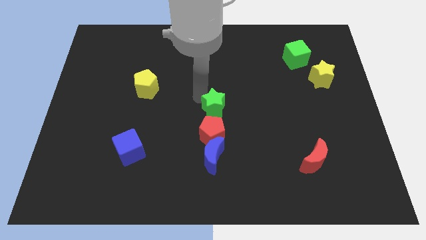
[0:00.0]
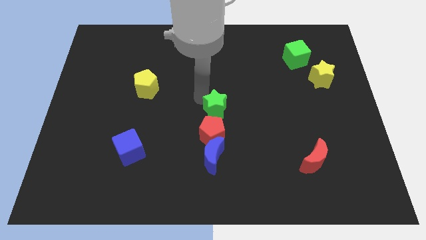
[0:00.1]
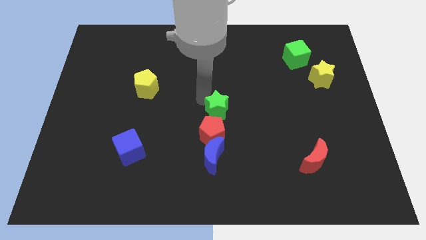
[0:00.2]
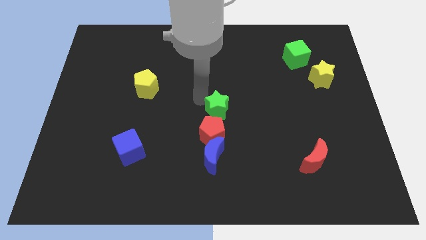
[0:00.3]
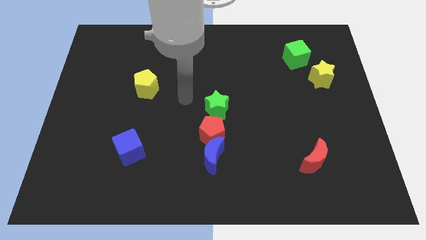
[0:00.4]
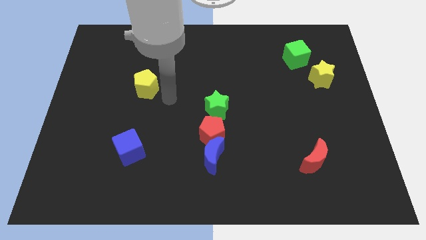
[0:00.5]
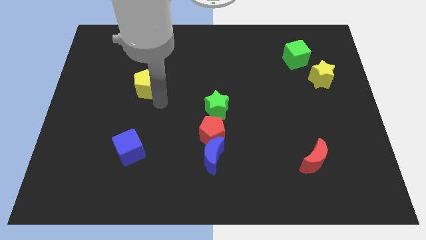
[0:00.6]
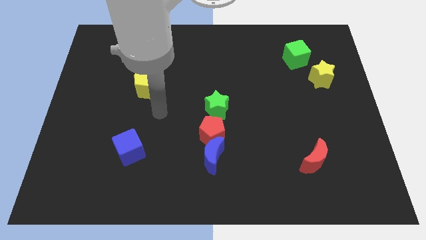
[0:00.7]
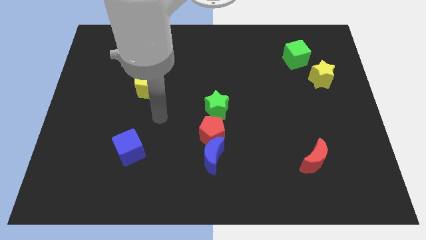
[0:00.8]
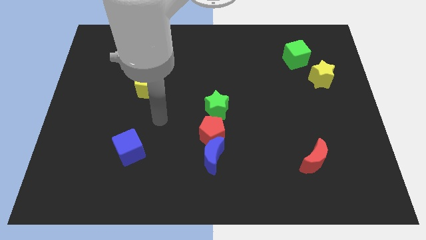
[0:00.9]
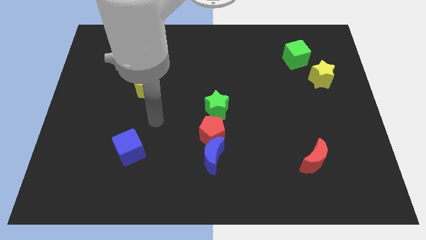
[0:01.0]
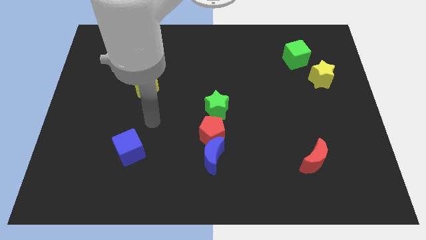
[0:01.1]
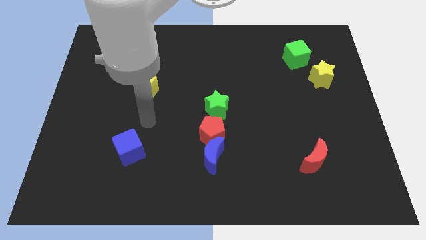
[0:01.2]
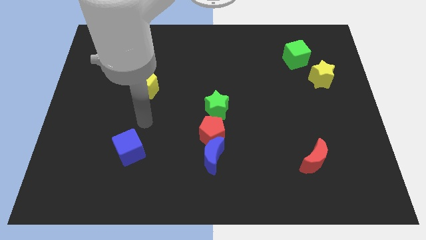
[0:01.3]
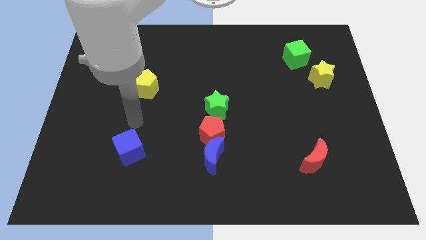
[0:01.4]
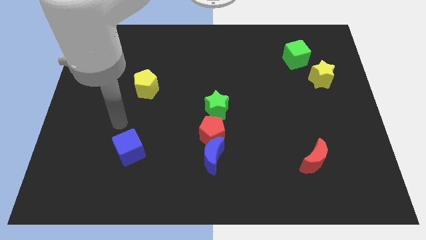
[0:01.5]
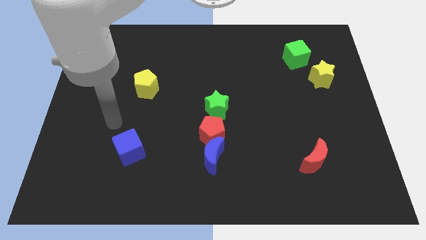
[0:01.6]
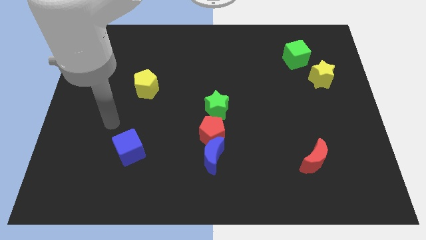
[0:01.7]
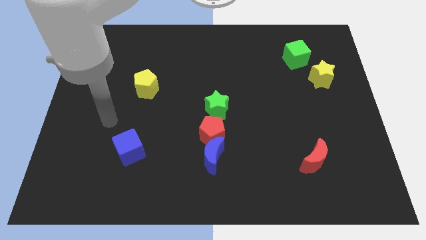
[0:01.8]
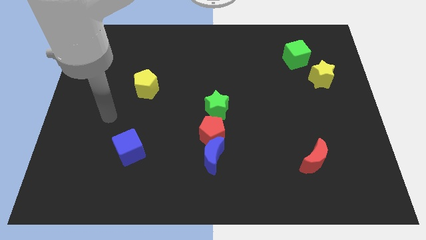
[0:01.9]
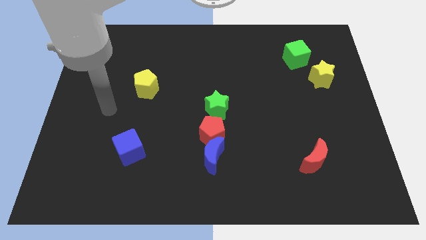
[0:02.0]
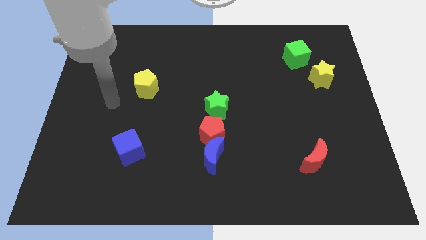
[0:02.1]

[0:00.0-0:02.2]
move yourself away from the green star

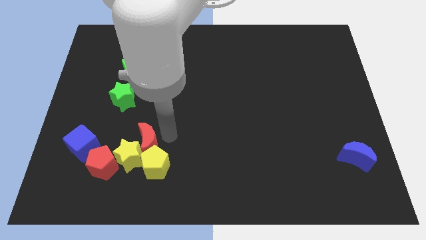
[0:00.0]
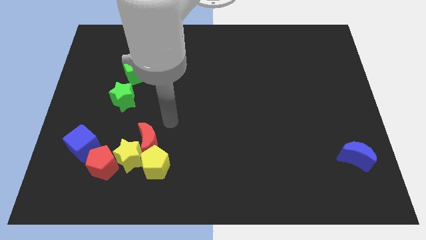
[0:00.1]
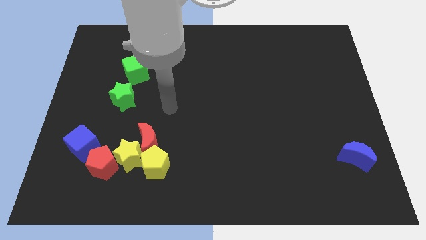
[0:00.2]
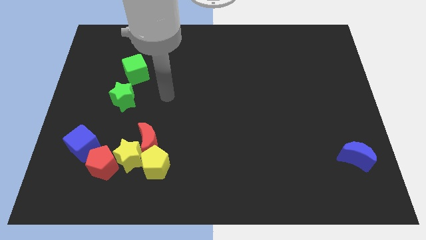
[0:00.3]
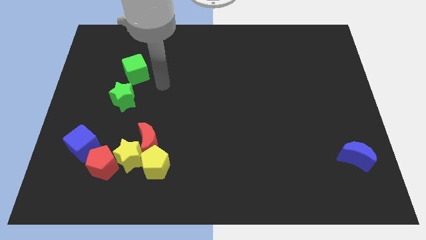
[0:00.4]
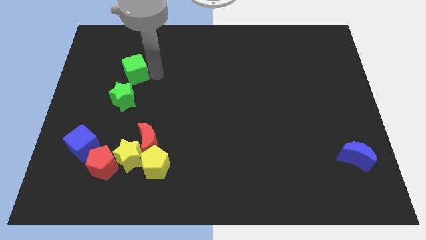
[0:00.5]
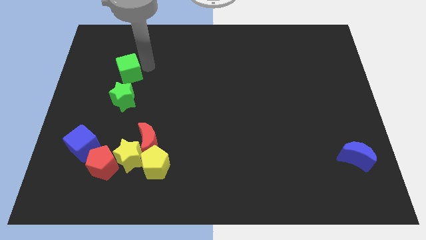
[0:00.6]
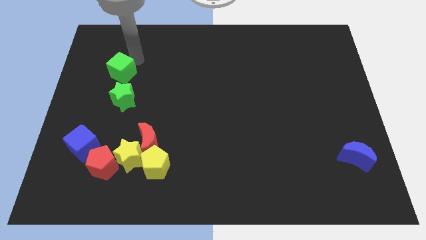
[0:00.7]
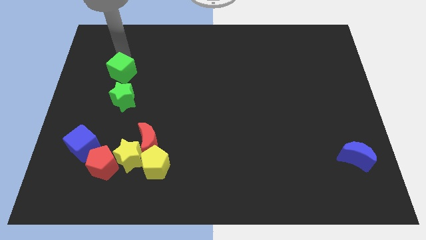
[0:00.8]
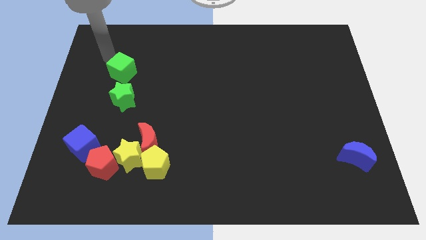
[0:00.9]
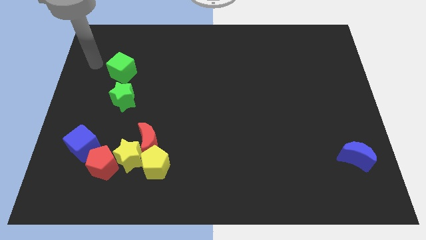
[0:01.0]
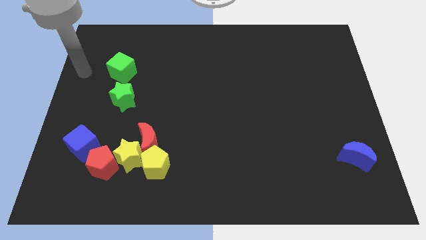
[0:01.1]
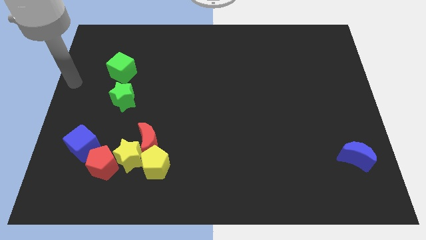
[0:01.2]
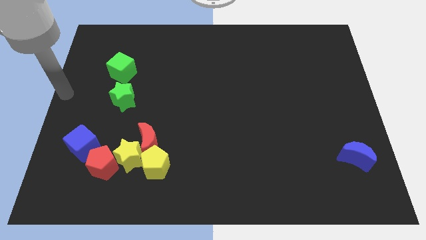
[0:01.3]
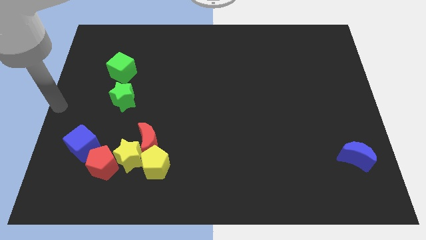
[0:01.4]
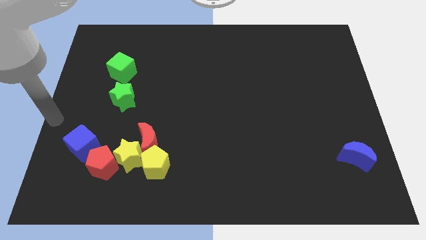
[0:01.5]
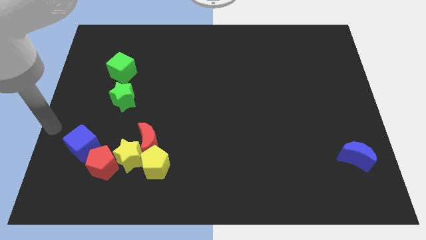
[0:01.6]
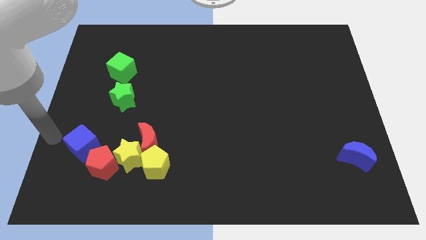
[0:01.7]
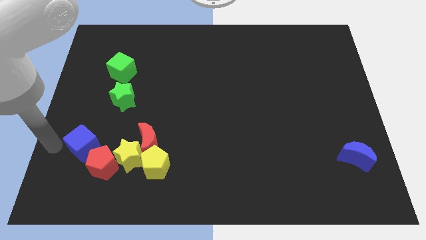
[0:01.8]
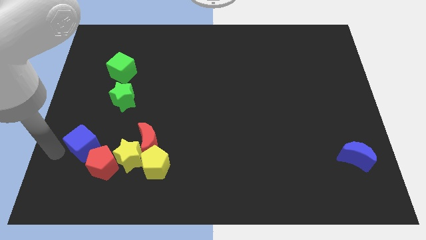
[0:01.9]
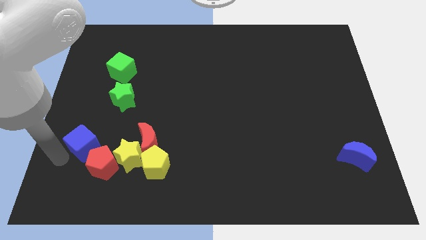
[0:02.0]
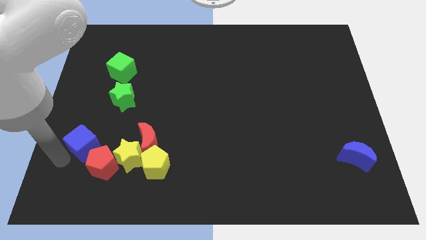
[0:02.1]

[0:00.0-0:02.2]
move your arm left to the blue cube

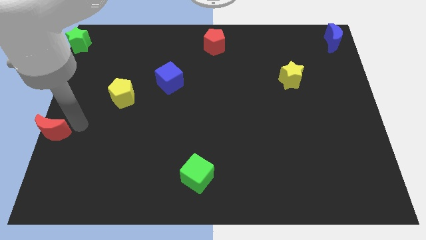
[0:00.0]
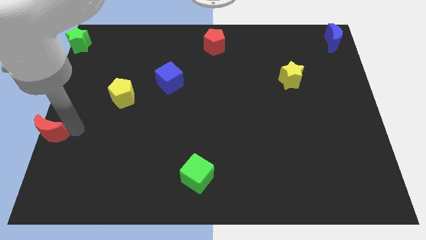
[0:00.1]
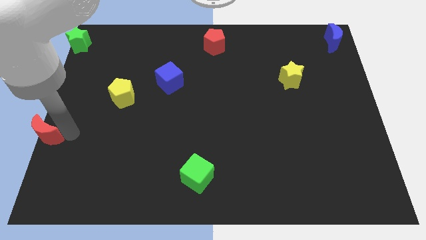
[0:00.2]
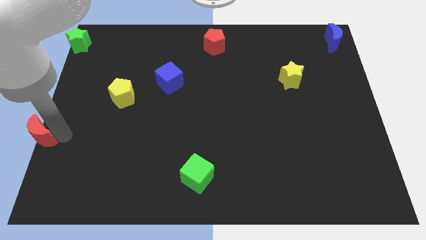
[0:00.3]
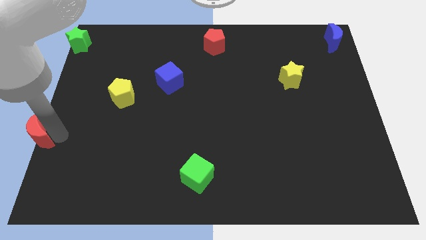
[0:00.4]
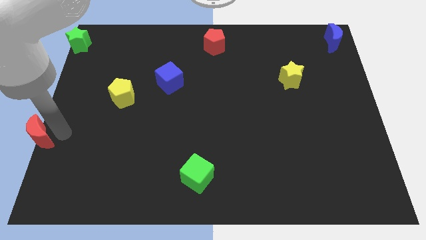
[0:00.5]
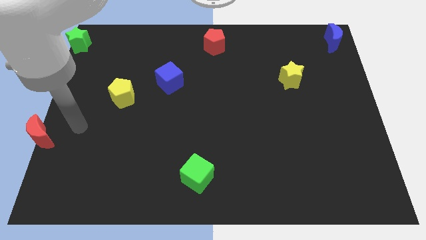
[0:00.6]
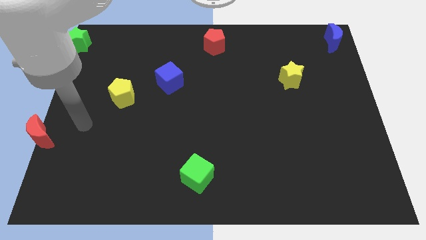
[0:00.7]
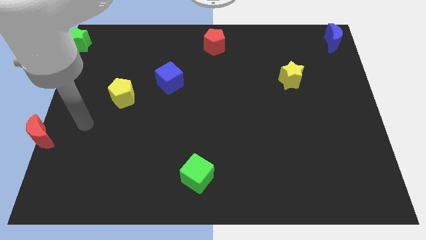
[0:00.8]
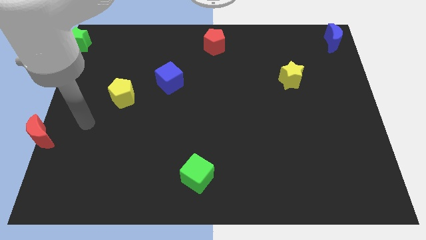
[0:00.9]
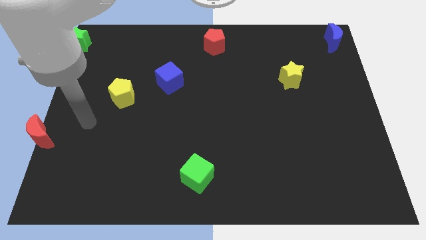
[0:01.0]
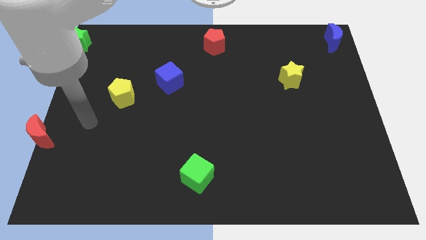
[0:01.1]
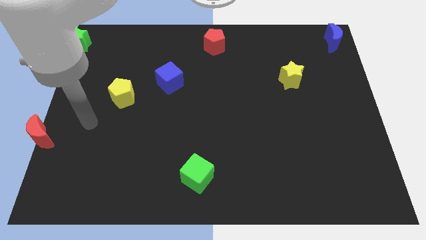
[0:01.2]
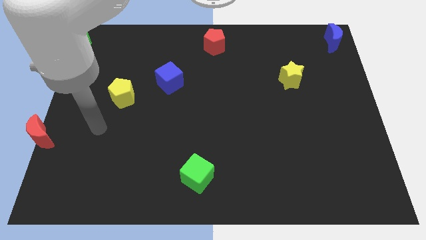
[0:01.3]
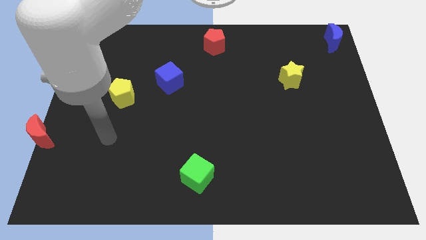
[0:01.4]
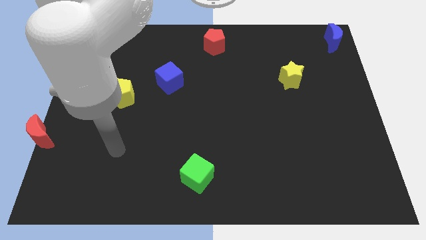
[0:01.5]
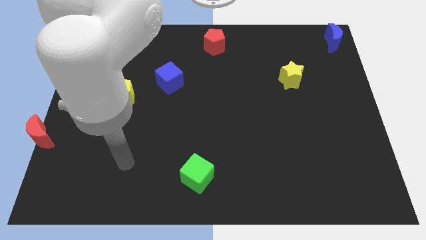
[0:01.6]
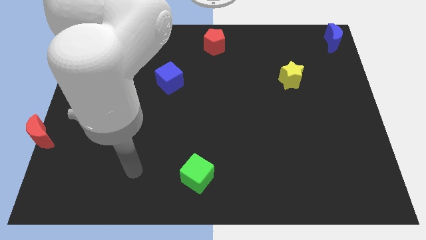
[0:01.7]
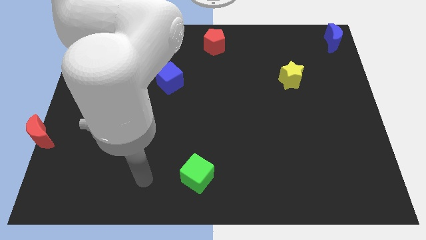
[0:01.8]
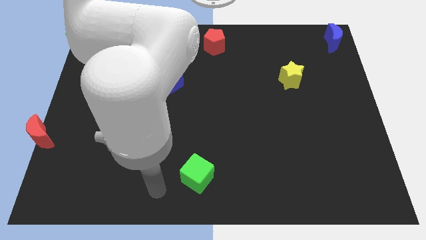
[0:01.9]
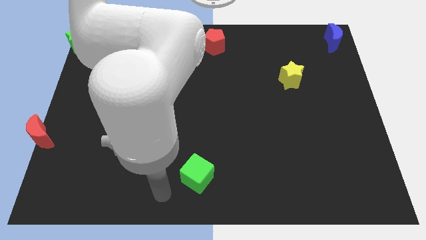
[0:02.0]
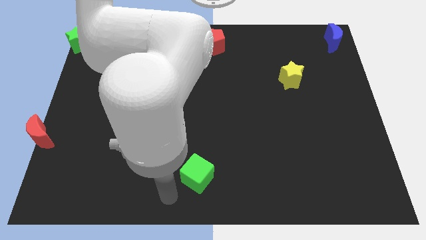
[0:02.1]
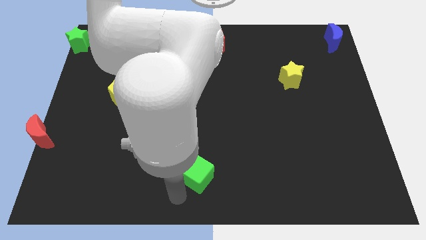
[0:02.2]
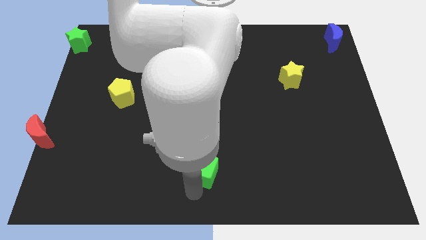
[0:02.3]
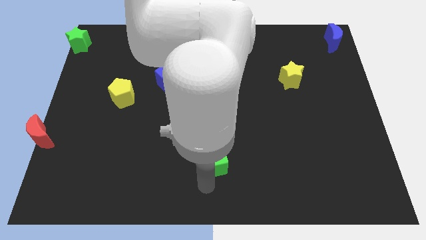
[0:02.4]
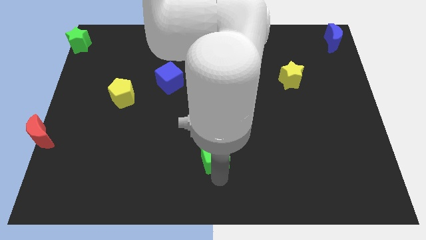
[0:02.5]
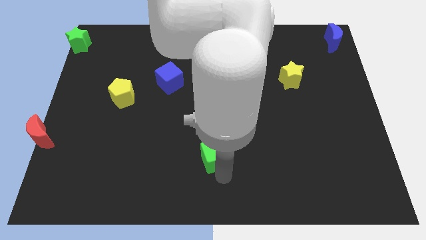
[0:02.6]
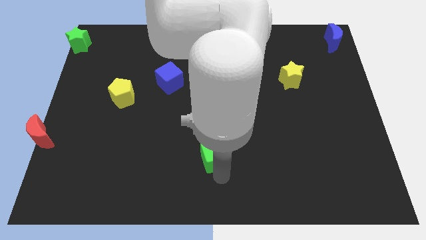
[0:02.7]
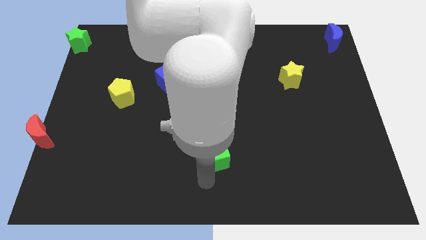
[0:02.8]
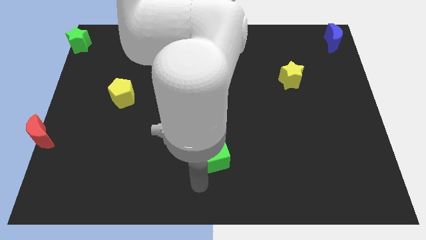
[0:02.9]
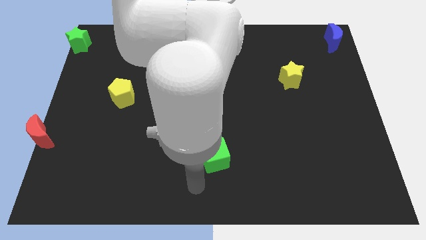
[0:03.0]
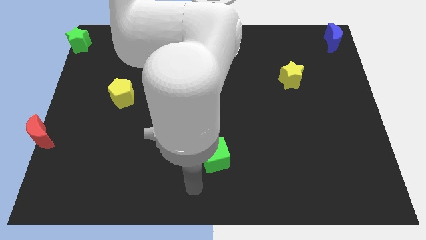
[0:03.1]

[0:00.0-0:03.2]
move the green cube slightly upwards

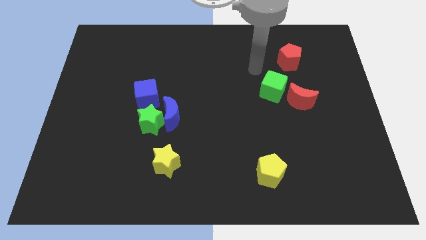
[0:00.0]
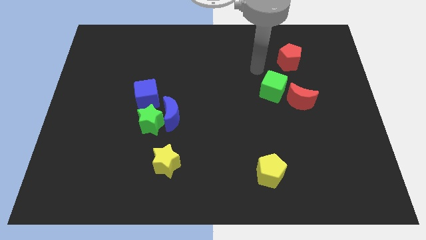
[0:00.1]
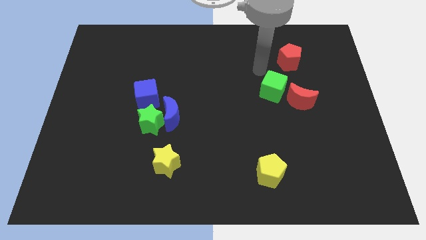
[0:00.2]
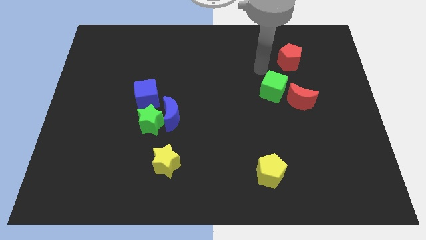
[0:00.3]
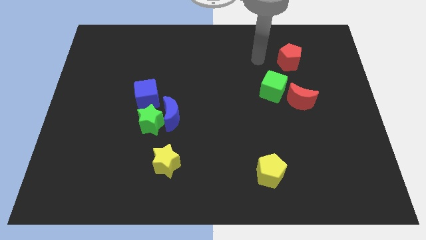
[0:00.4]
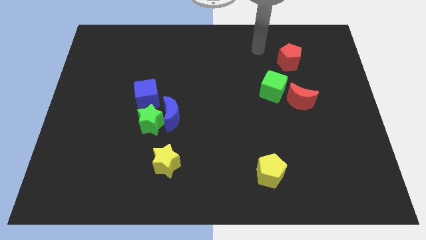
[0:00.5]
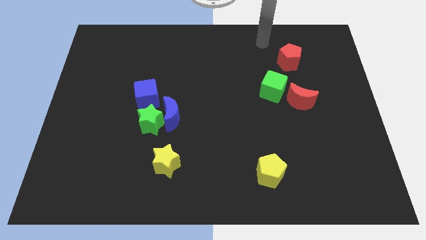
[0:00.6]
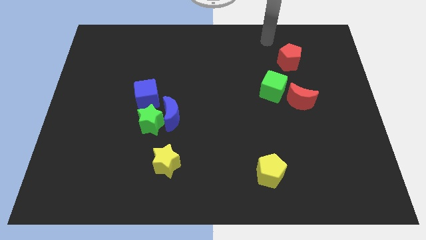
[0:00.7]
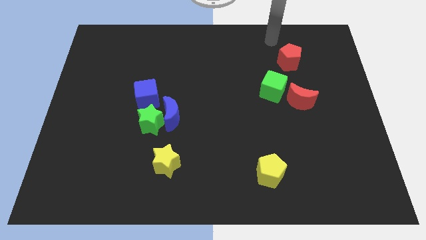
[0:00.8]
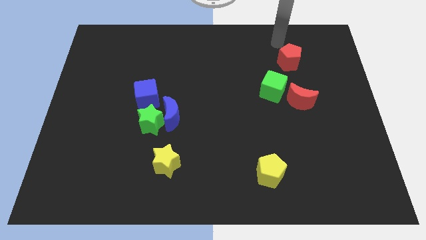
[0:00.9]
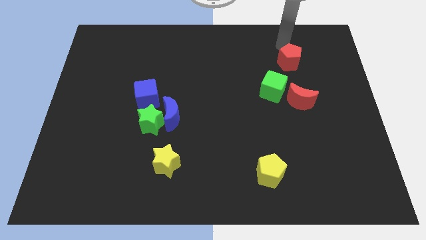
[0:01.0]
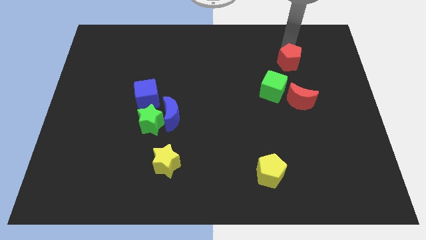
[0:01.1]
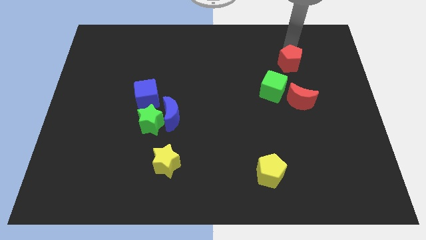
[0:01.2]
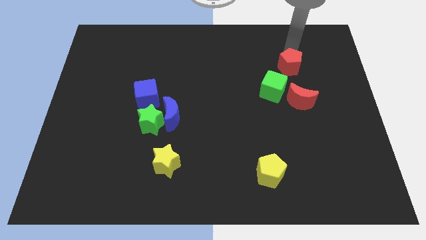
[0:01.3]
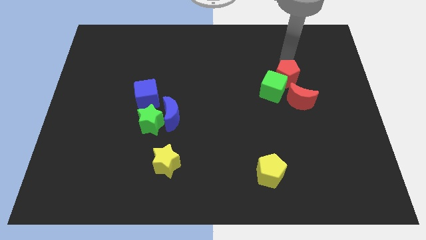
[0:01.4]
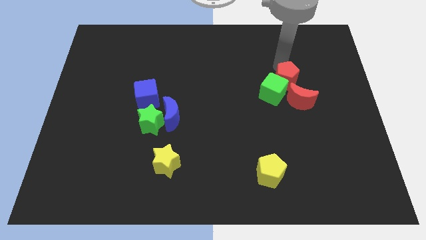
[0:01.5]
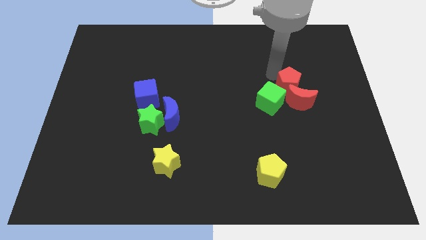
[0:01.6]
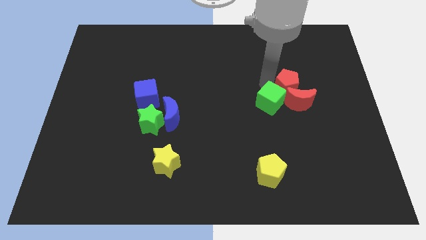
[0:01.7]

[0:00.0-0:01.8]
push red pentagon towards green cube
